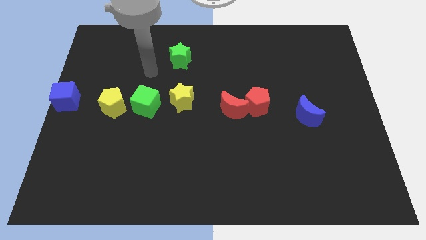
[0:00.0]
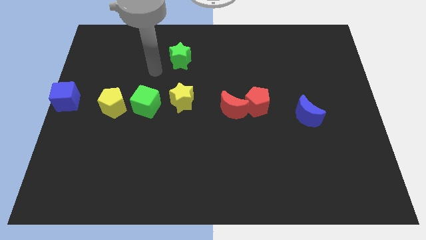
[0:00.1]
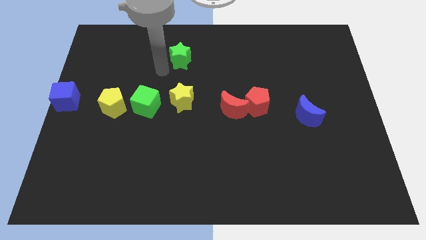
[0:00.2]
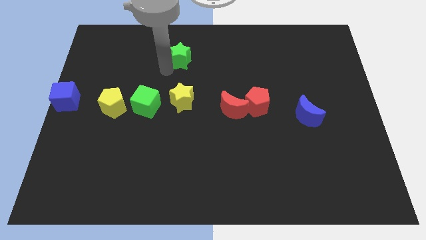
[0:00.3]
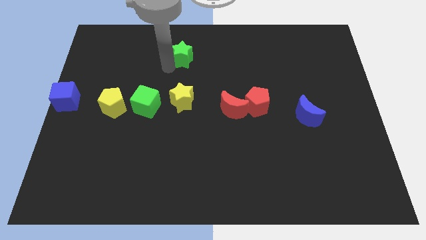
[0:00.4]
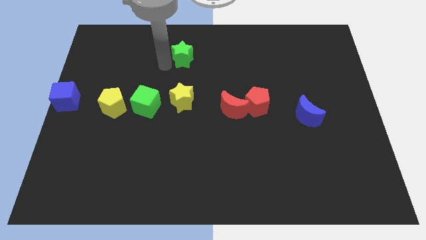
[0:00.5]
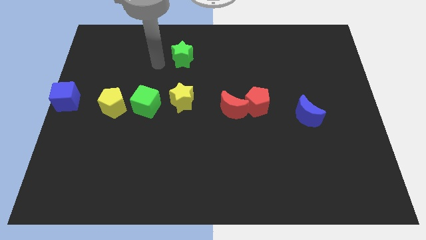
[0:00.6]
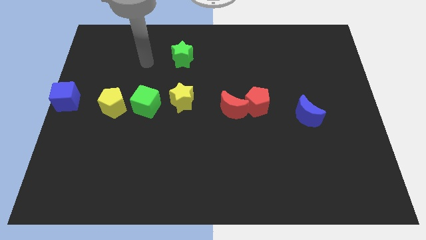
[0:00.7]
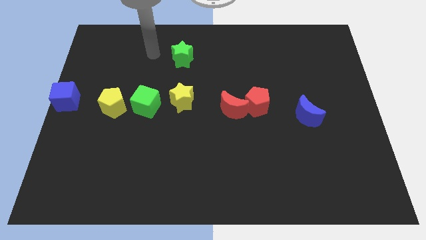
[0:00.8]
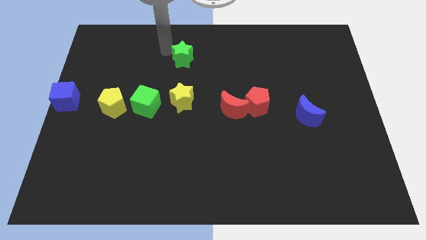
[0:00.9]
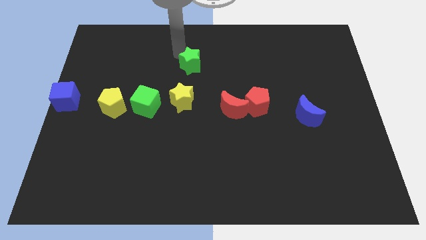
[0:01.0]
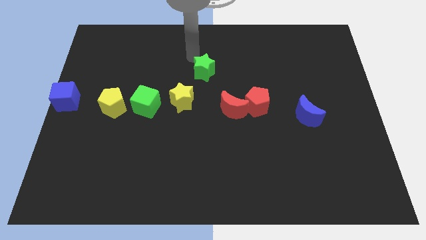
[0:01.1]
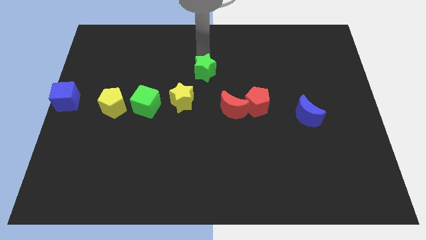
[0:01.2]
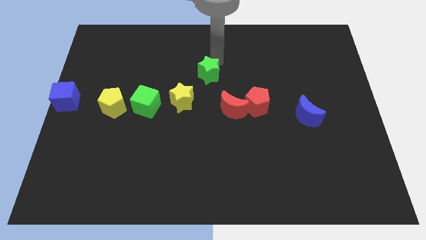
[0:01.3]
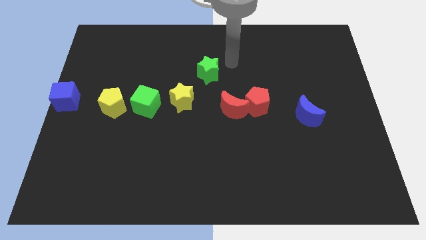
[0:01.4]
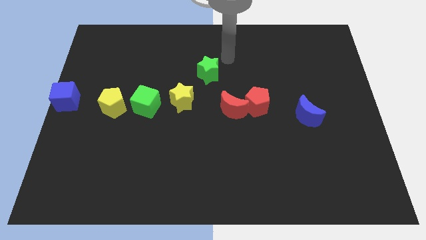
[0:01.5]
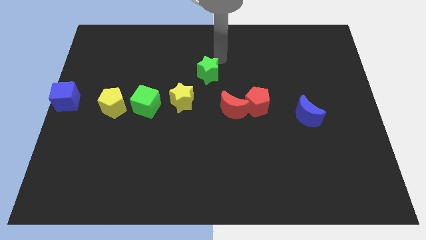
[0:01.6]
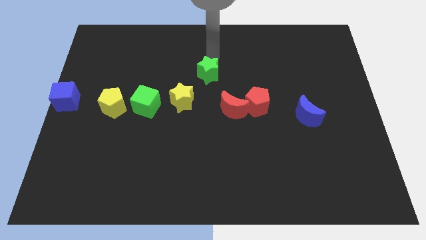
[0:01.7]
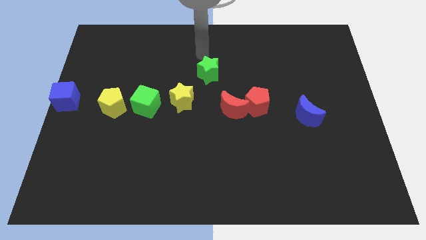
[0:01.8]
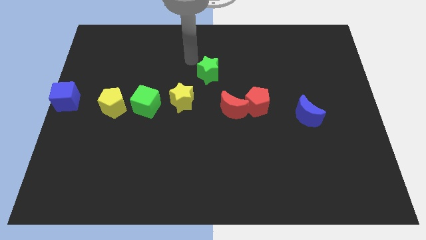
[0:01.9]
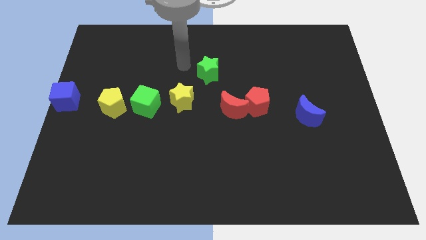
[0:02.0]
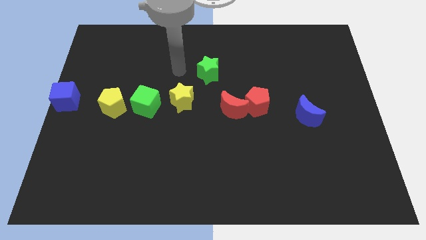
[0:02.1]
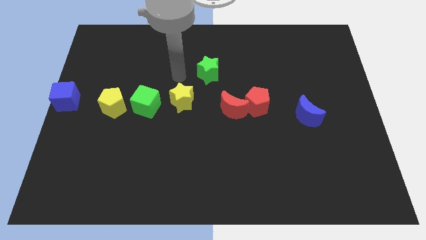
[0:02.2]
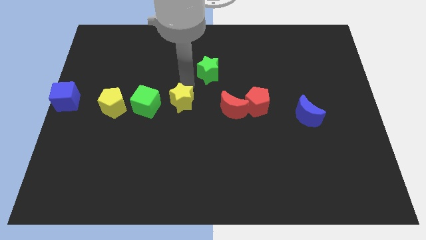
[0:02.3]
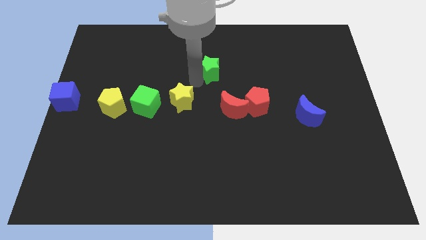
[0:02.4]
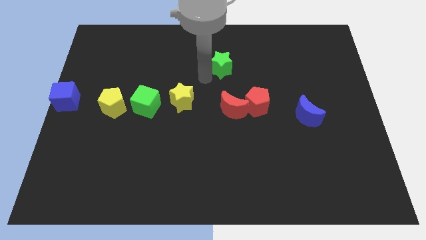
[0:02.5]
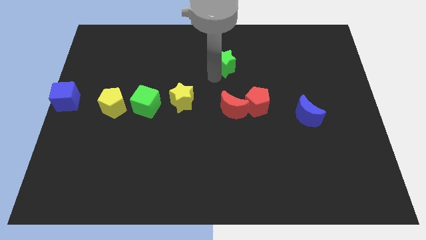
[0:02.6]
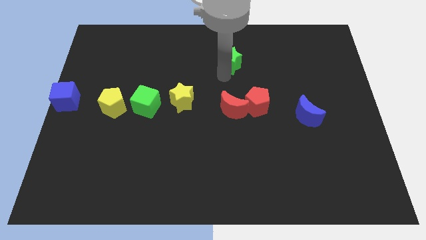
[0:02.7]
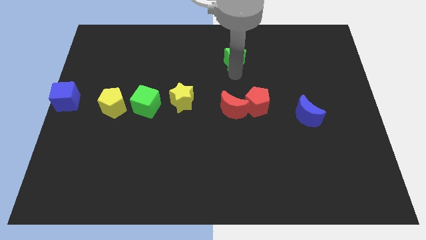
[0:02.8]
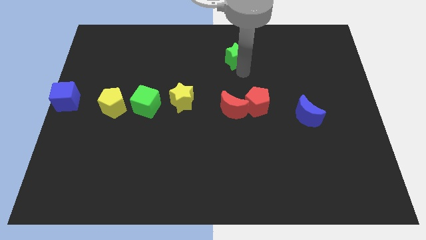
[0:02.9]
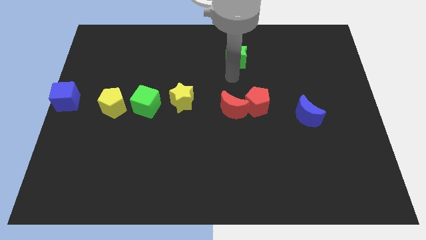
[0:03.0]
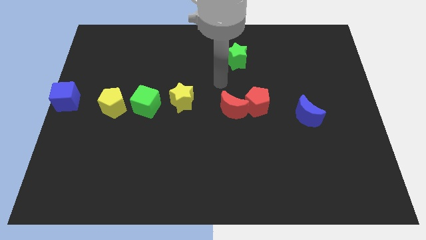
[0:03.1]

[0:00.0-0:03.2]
push the green star above the group of red blocks

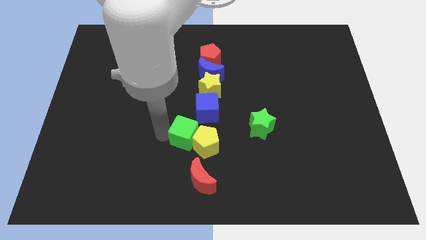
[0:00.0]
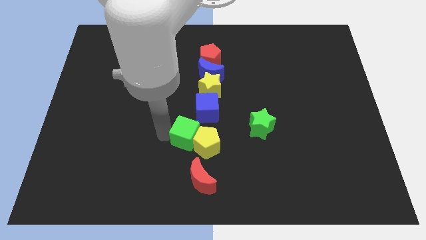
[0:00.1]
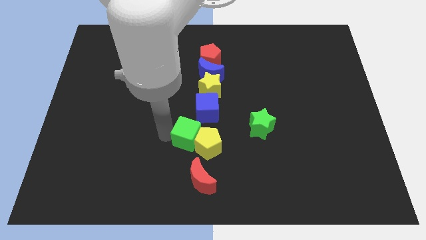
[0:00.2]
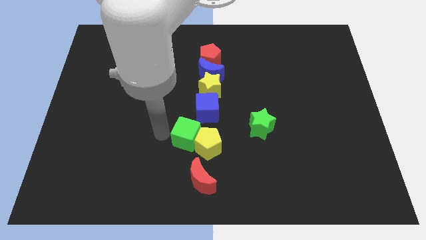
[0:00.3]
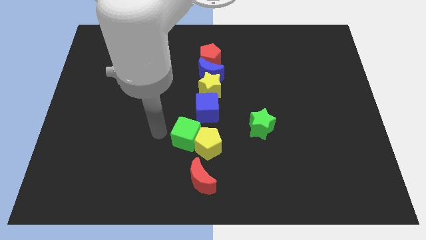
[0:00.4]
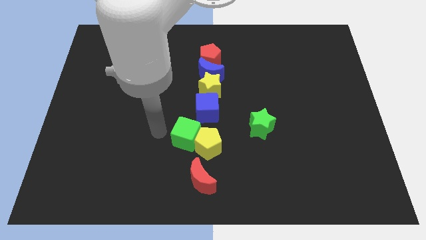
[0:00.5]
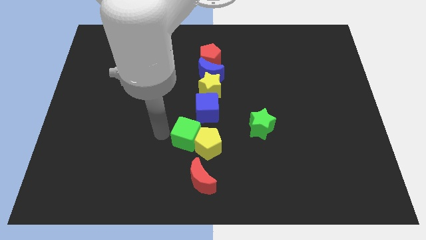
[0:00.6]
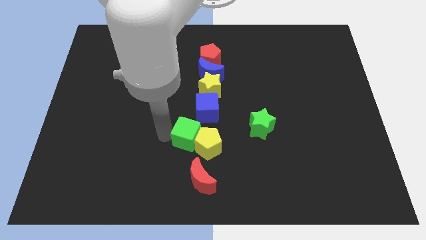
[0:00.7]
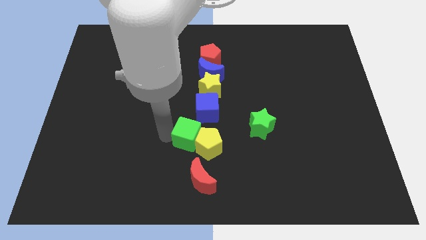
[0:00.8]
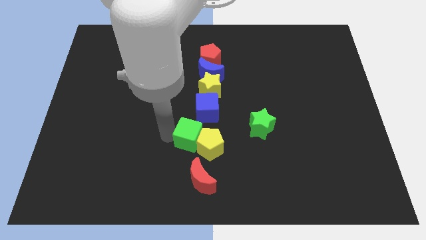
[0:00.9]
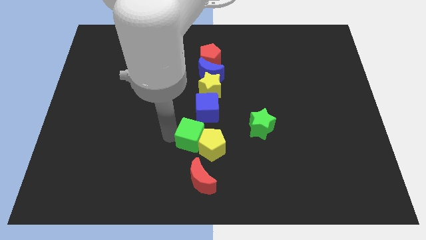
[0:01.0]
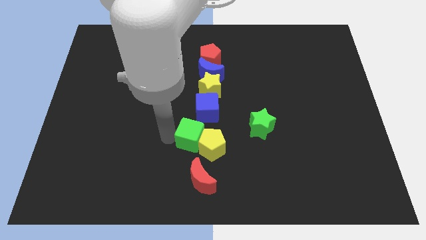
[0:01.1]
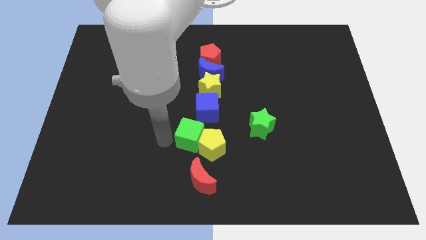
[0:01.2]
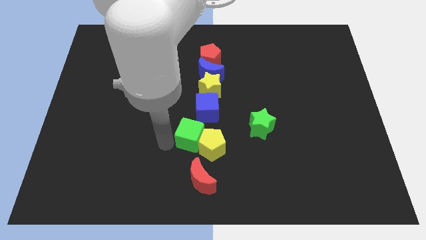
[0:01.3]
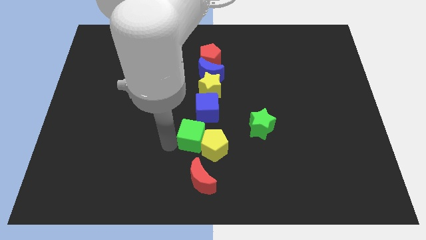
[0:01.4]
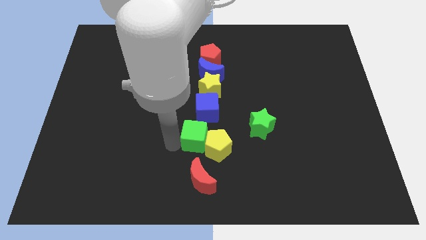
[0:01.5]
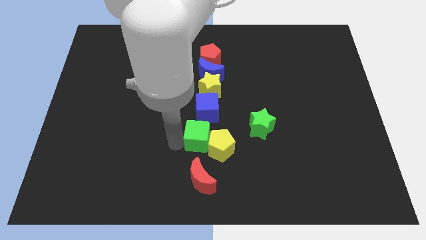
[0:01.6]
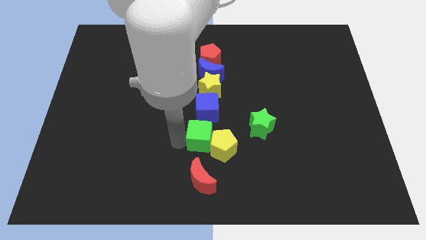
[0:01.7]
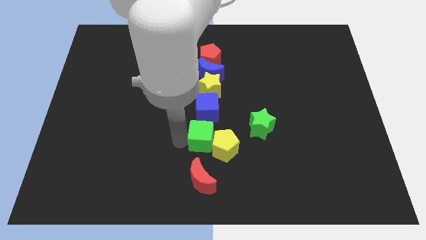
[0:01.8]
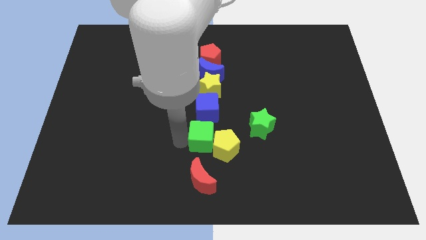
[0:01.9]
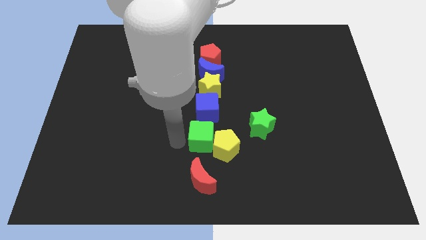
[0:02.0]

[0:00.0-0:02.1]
move green cube towards the bottom of the blue cube

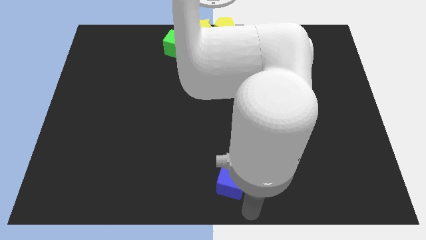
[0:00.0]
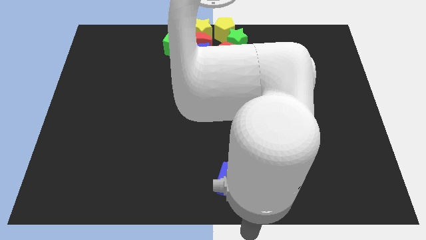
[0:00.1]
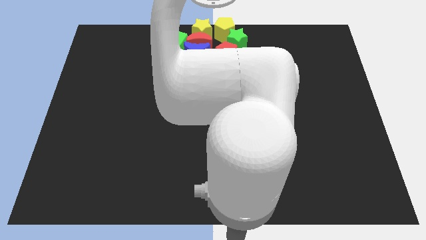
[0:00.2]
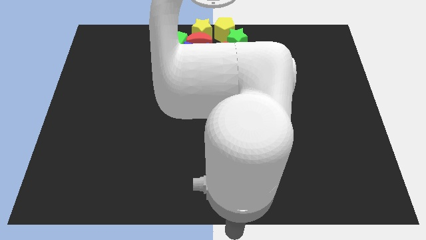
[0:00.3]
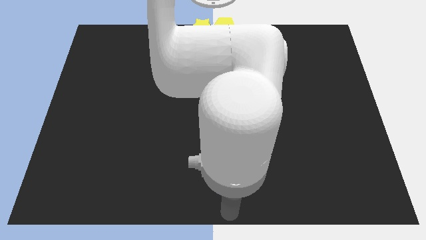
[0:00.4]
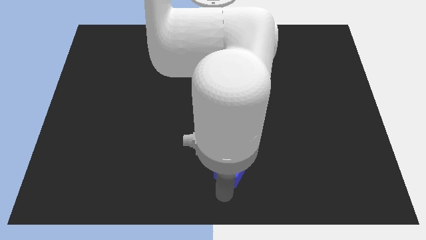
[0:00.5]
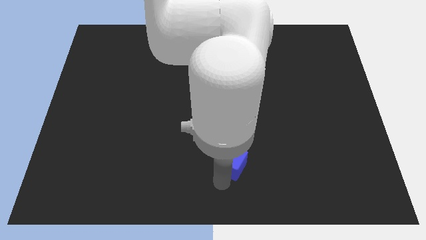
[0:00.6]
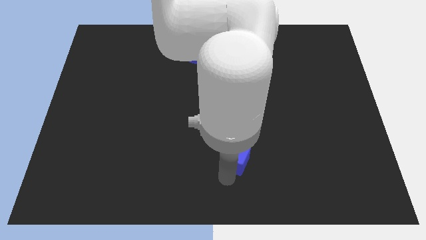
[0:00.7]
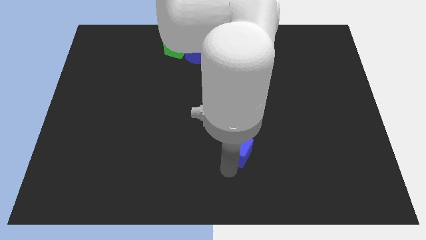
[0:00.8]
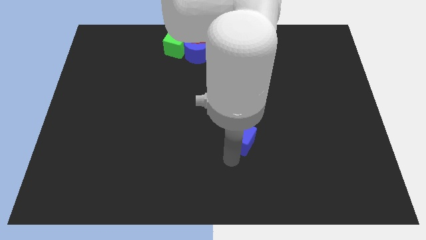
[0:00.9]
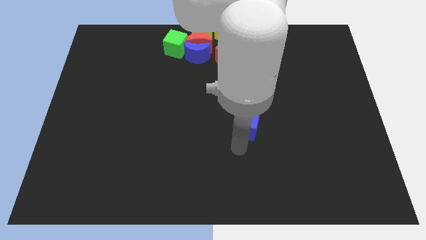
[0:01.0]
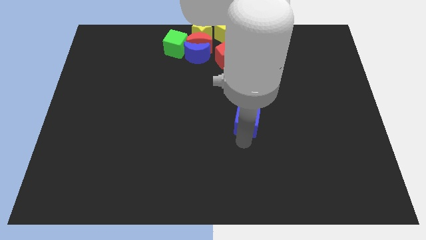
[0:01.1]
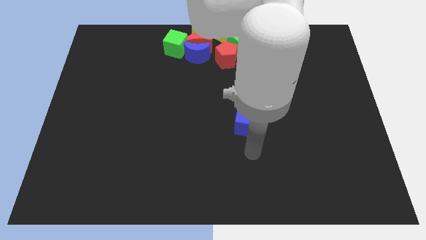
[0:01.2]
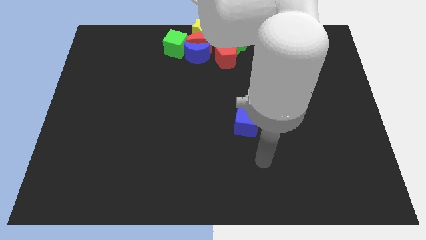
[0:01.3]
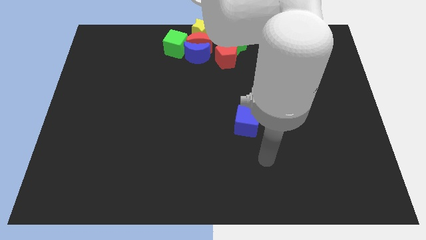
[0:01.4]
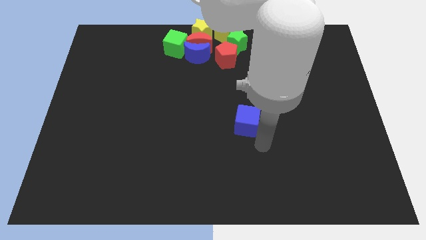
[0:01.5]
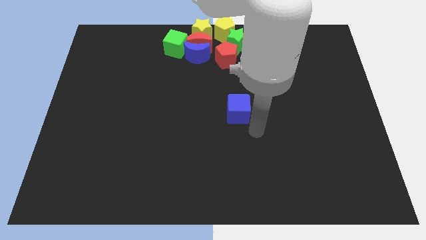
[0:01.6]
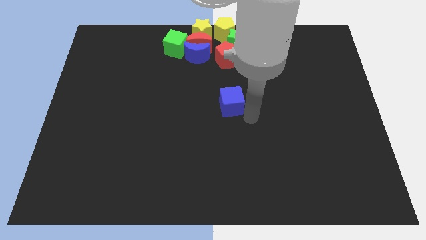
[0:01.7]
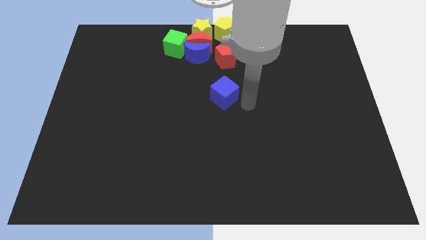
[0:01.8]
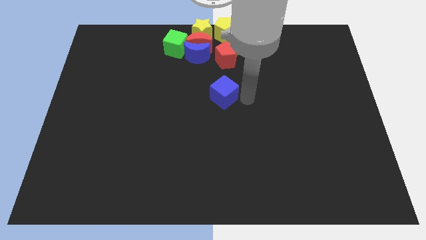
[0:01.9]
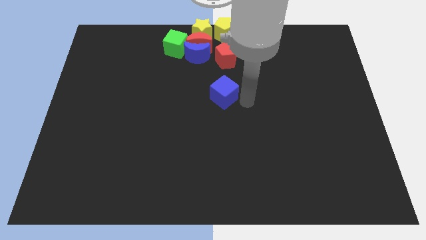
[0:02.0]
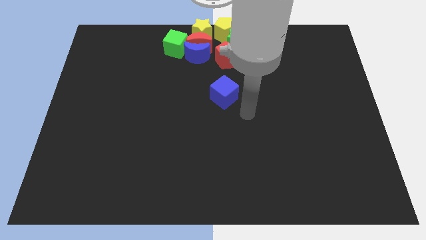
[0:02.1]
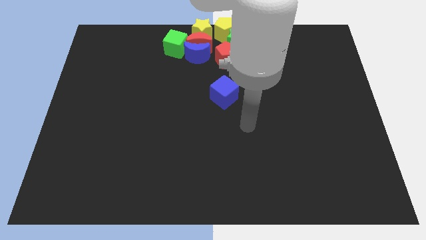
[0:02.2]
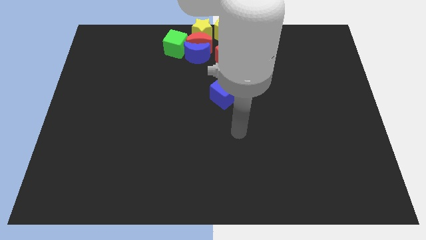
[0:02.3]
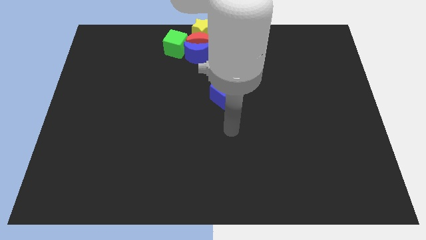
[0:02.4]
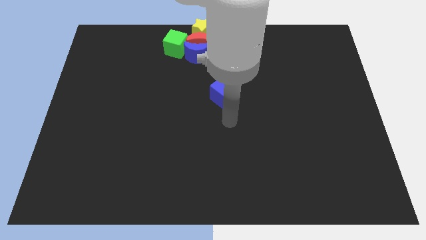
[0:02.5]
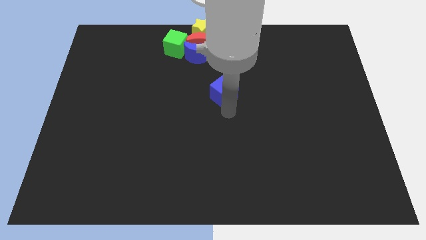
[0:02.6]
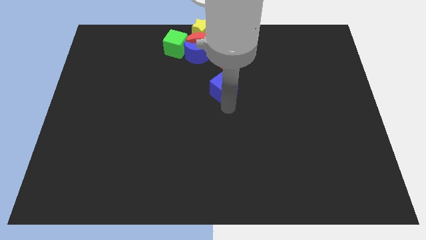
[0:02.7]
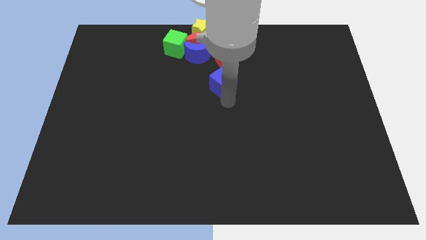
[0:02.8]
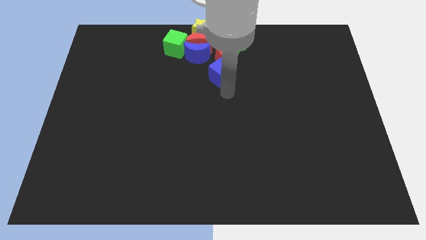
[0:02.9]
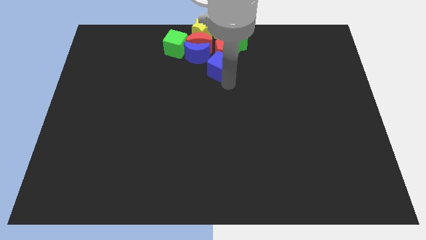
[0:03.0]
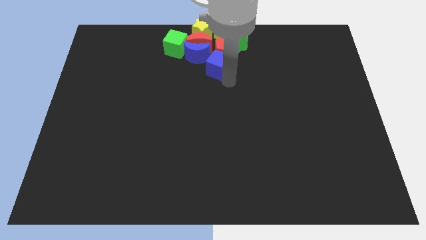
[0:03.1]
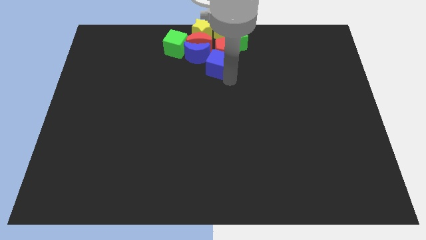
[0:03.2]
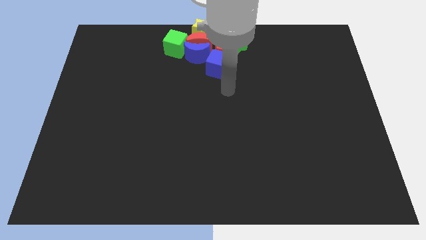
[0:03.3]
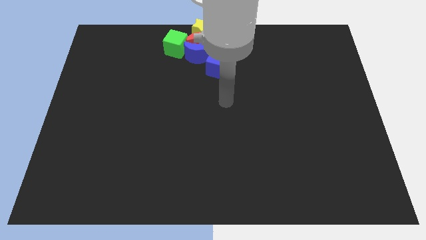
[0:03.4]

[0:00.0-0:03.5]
move the blue cube to the bottom of red pentagon

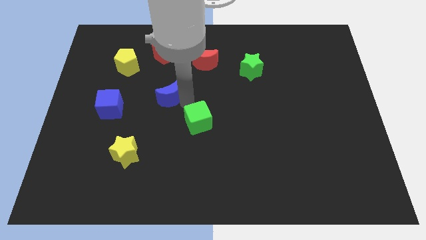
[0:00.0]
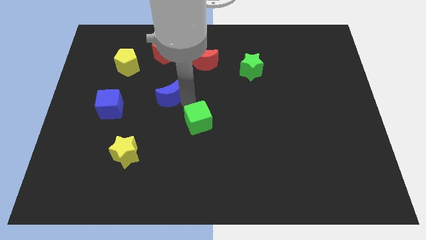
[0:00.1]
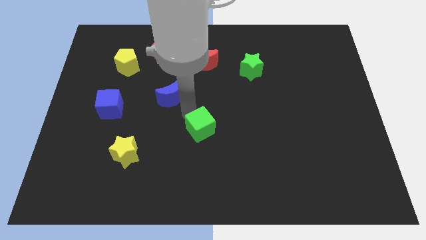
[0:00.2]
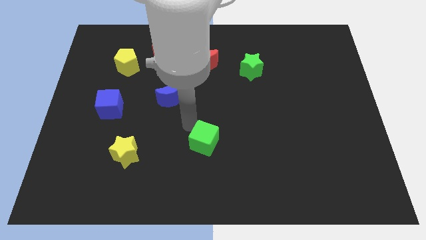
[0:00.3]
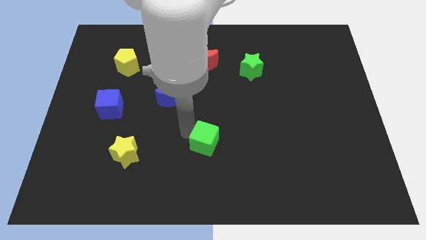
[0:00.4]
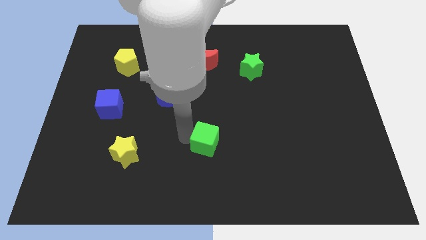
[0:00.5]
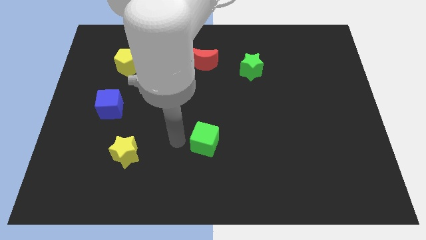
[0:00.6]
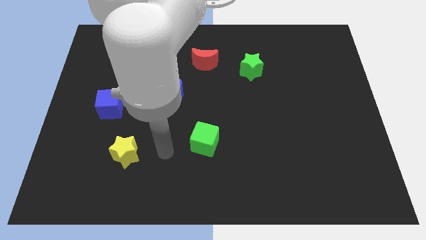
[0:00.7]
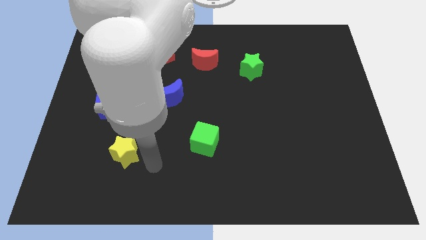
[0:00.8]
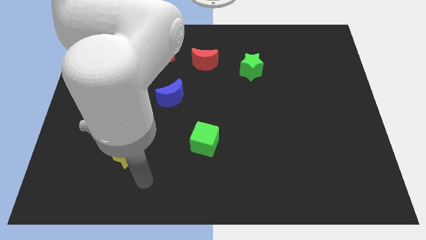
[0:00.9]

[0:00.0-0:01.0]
move the green cube to the down
